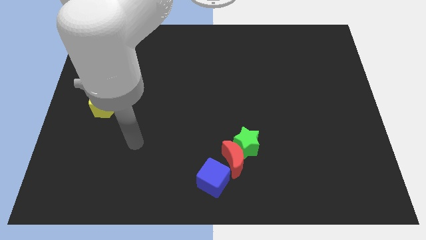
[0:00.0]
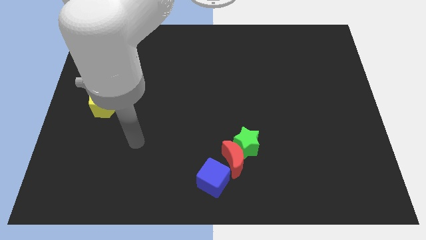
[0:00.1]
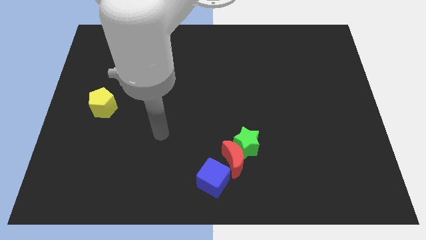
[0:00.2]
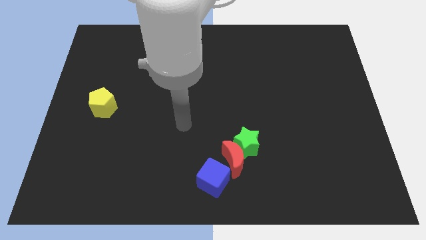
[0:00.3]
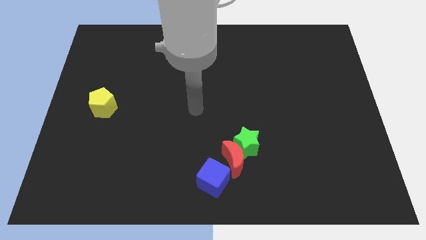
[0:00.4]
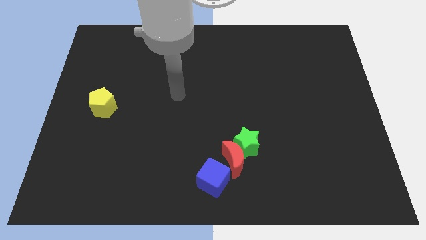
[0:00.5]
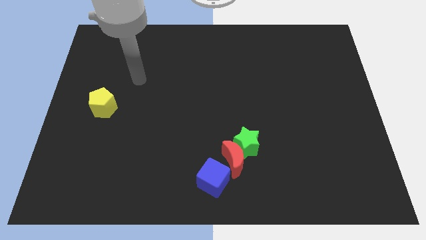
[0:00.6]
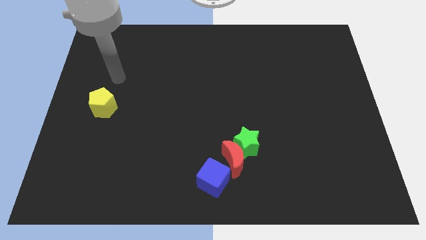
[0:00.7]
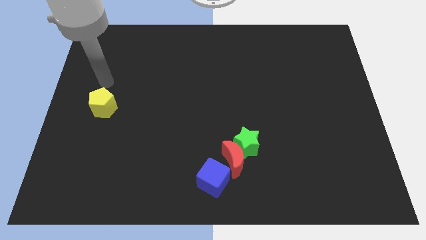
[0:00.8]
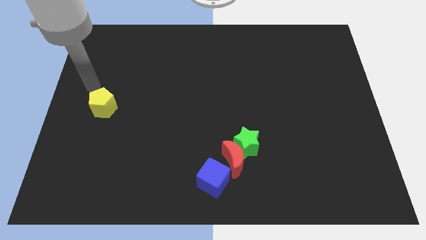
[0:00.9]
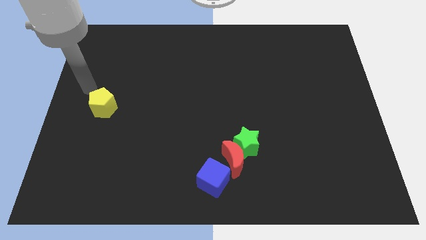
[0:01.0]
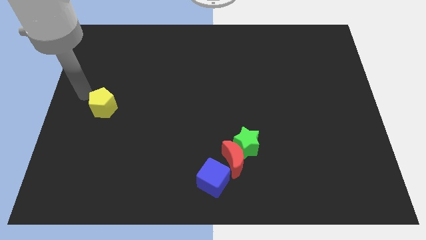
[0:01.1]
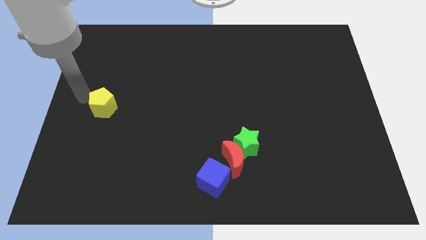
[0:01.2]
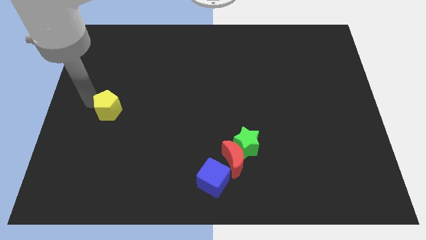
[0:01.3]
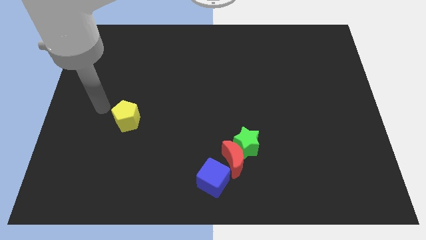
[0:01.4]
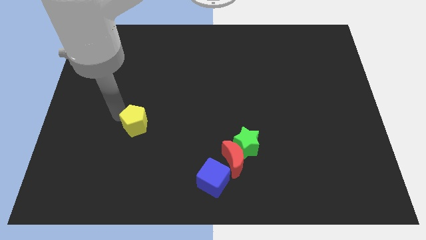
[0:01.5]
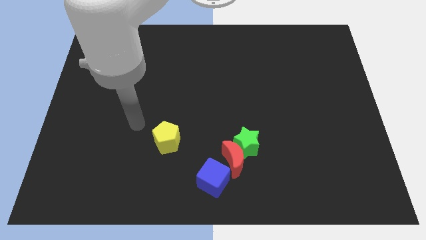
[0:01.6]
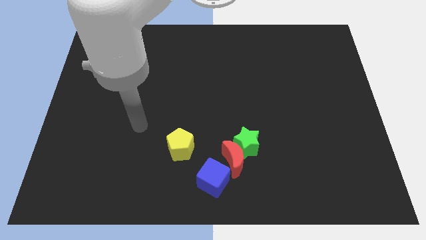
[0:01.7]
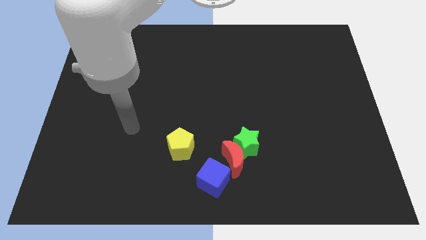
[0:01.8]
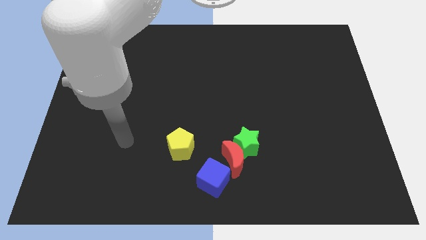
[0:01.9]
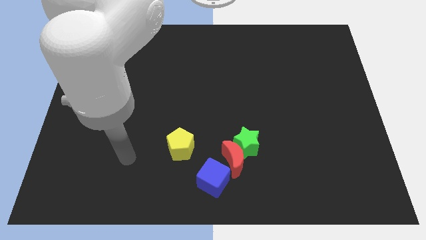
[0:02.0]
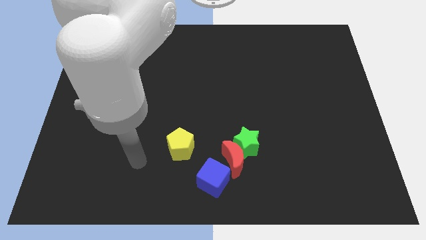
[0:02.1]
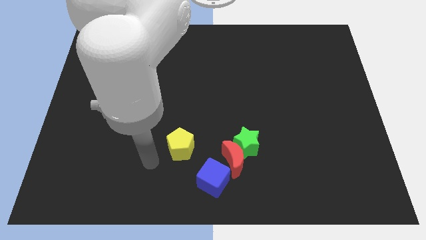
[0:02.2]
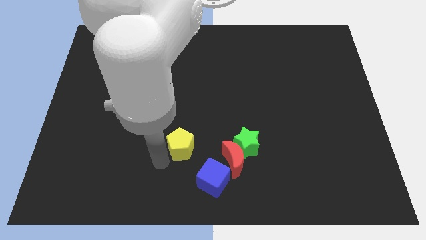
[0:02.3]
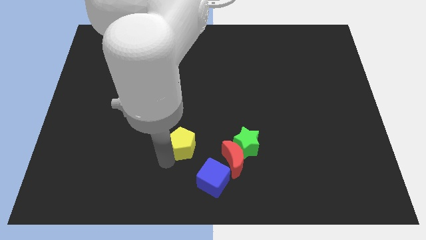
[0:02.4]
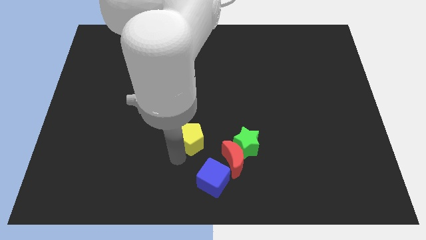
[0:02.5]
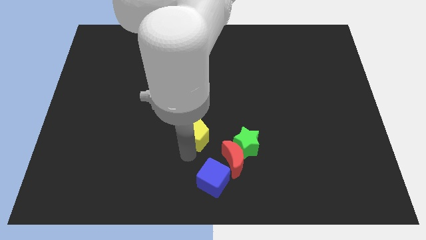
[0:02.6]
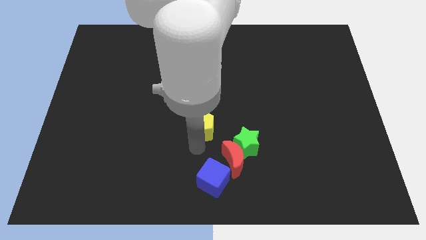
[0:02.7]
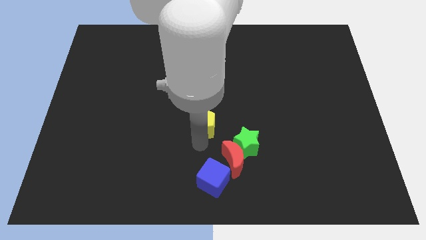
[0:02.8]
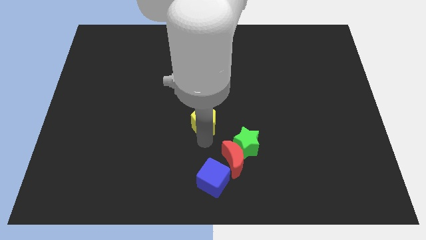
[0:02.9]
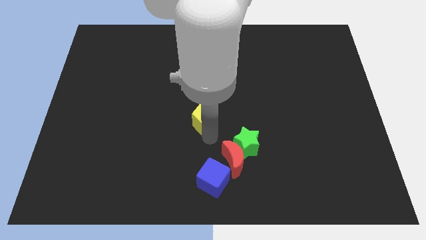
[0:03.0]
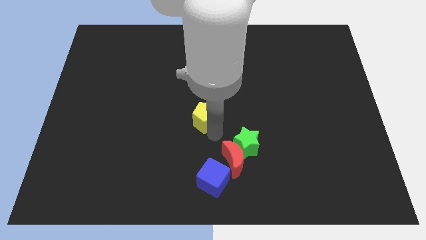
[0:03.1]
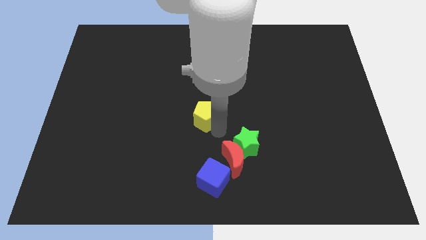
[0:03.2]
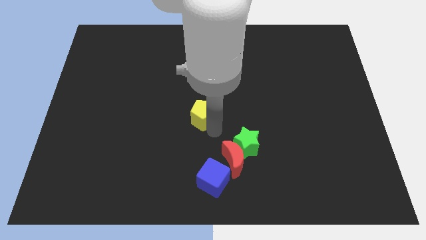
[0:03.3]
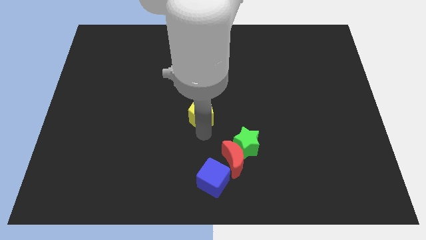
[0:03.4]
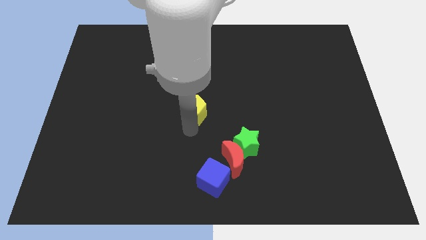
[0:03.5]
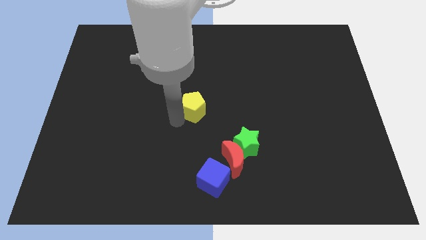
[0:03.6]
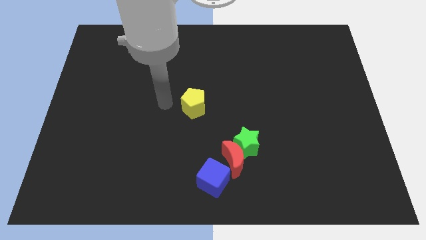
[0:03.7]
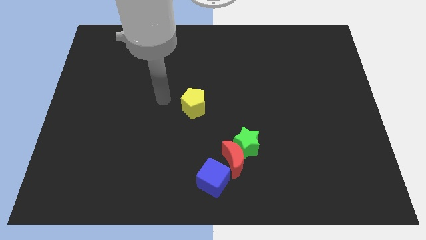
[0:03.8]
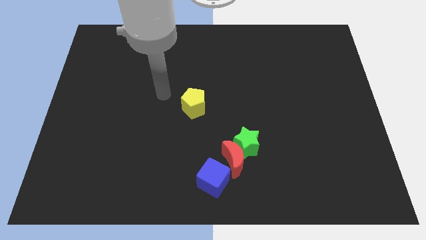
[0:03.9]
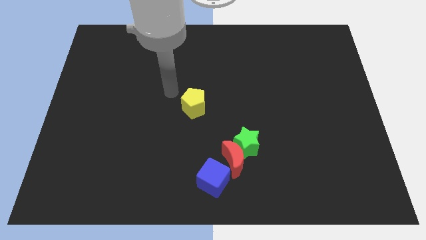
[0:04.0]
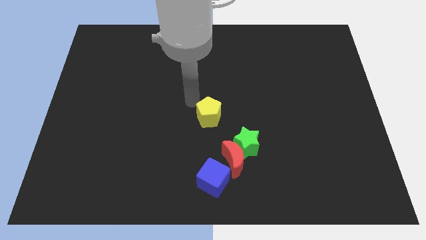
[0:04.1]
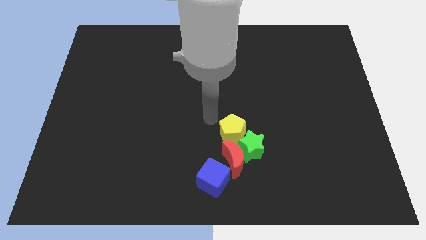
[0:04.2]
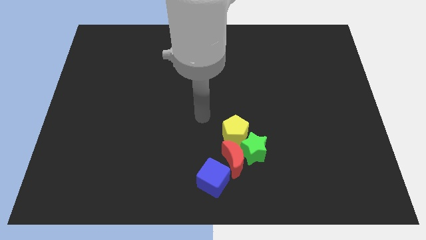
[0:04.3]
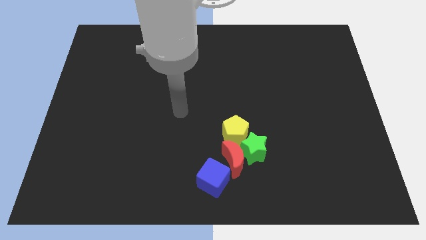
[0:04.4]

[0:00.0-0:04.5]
push the pentagon to the green star

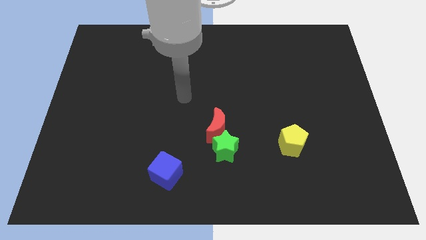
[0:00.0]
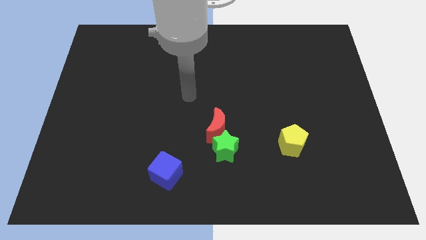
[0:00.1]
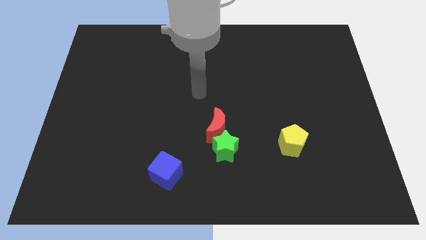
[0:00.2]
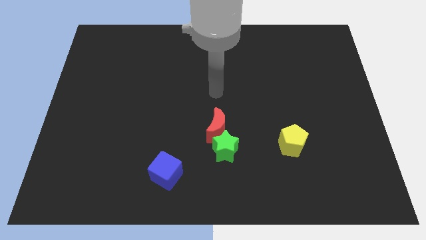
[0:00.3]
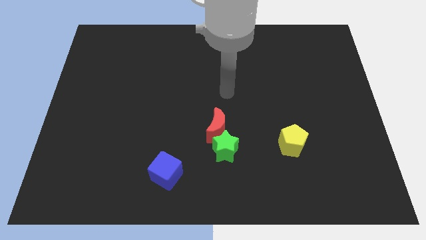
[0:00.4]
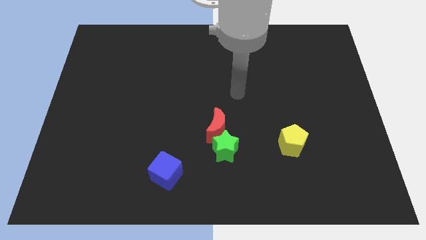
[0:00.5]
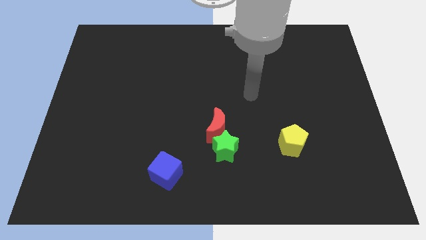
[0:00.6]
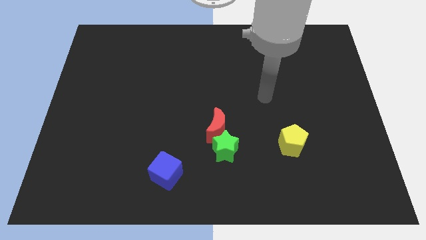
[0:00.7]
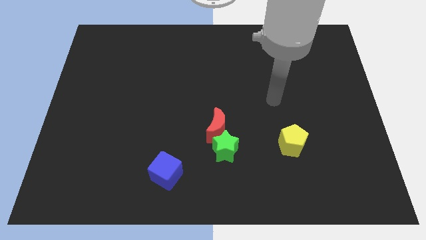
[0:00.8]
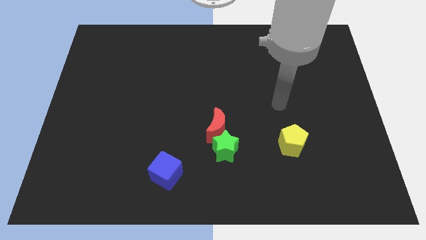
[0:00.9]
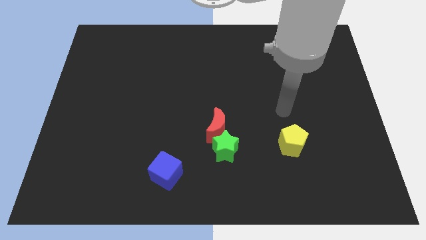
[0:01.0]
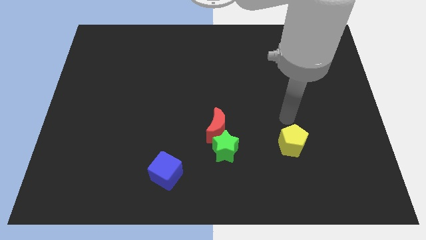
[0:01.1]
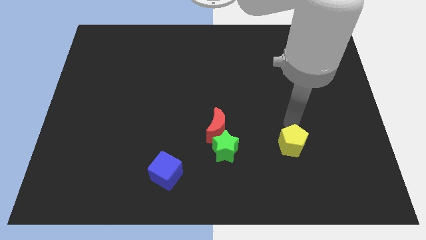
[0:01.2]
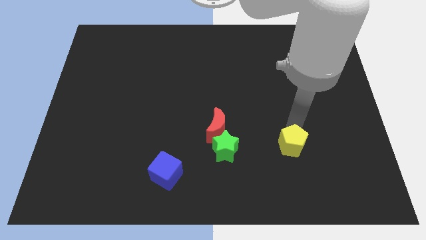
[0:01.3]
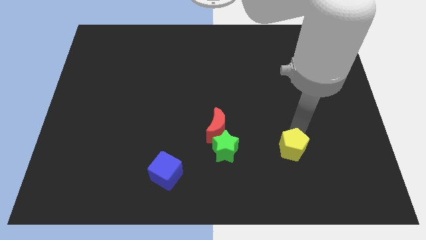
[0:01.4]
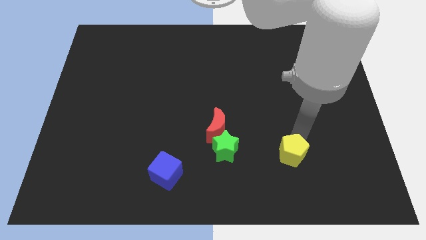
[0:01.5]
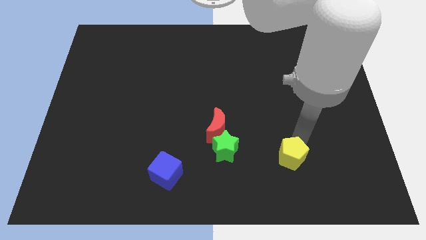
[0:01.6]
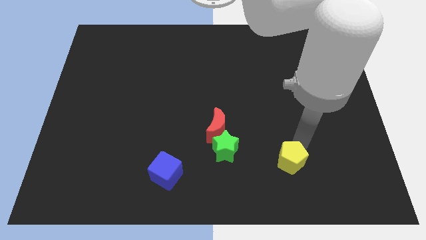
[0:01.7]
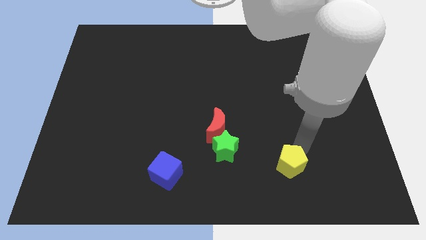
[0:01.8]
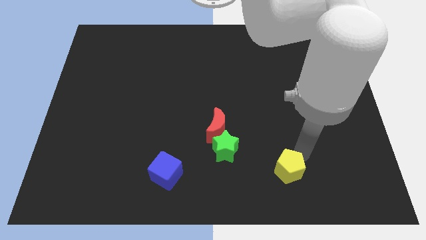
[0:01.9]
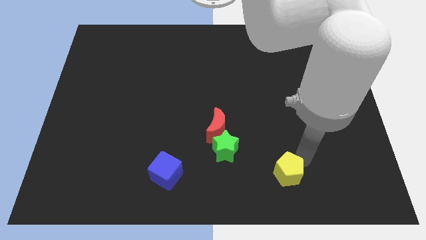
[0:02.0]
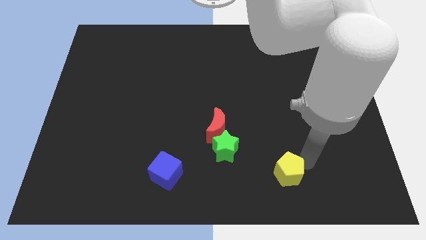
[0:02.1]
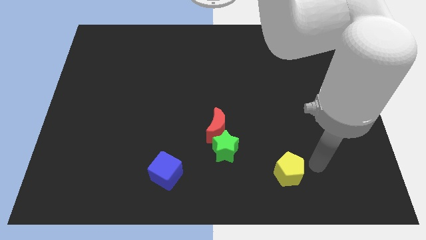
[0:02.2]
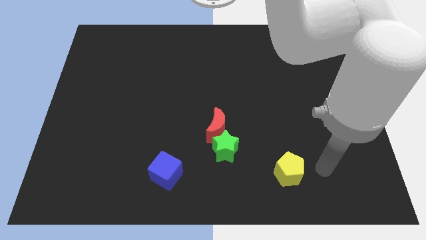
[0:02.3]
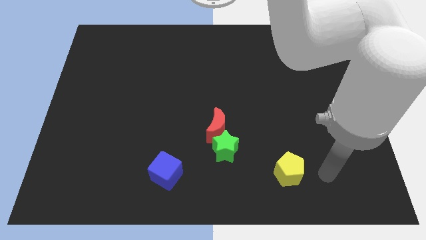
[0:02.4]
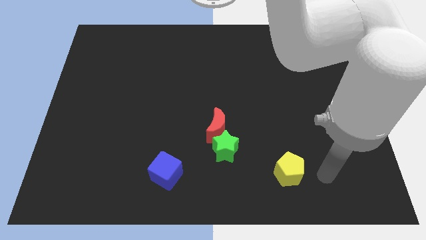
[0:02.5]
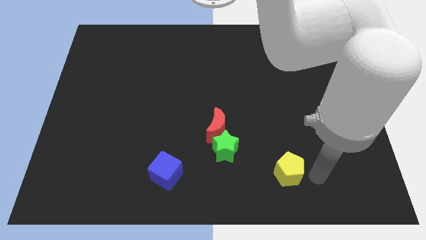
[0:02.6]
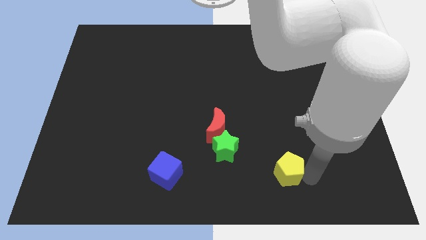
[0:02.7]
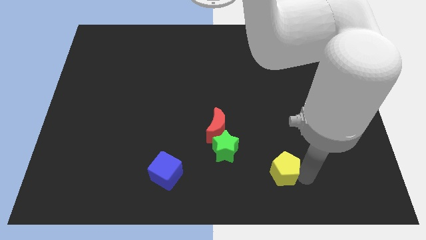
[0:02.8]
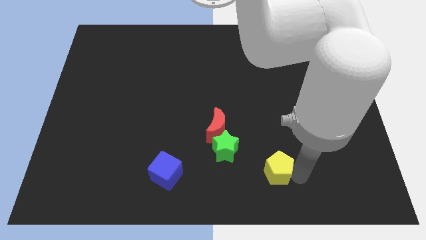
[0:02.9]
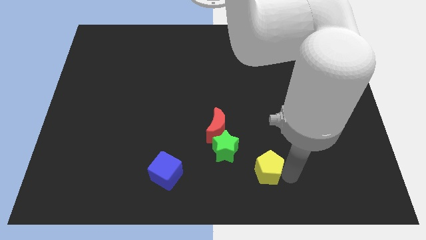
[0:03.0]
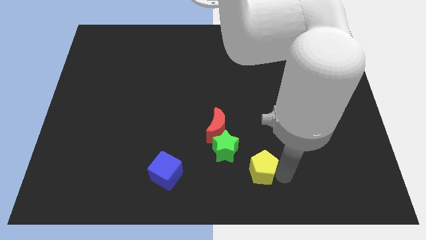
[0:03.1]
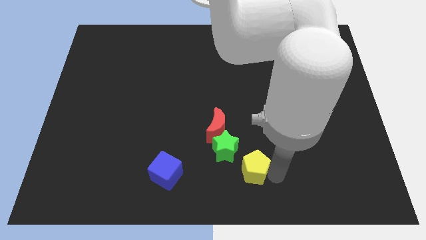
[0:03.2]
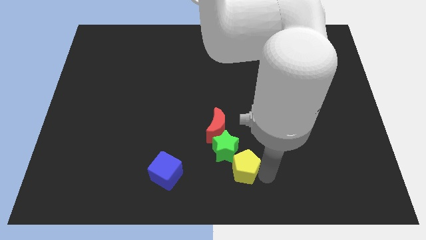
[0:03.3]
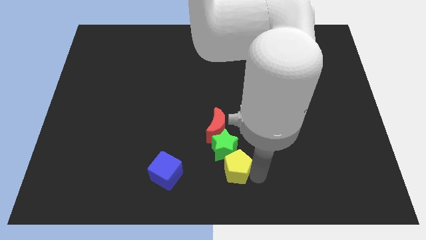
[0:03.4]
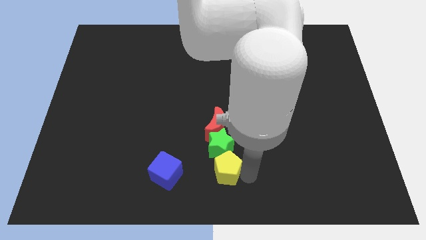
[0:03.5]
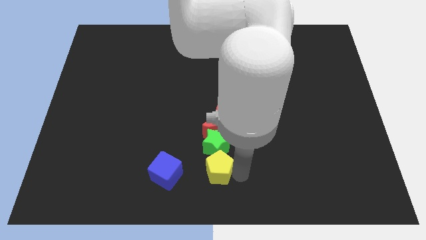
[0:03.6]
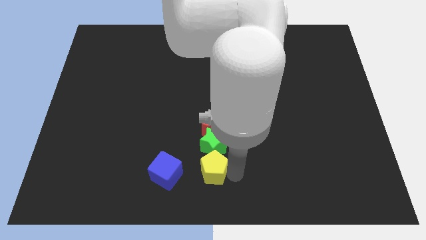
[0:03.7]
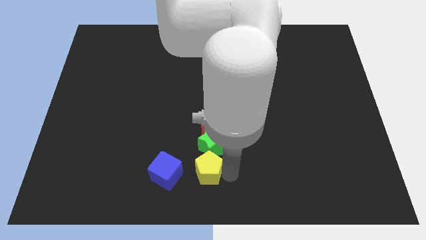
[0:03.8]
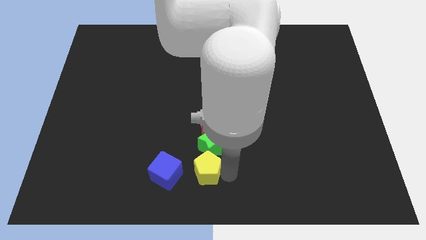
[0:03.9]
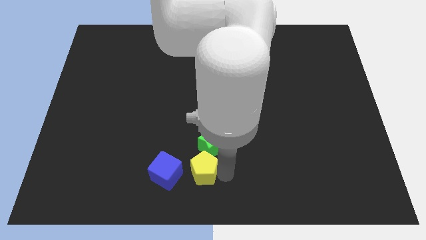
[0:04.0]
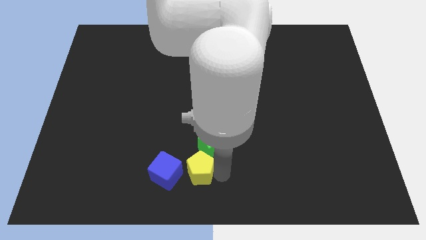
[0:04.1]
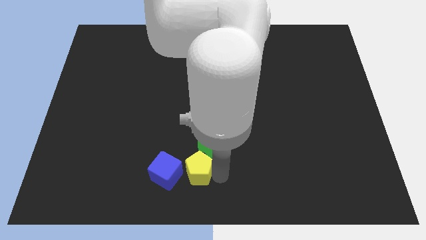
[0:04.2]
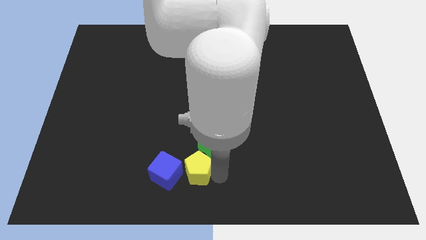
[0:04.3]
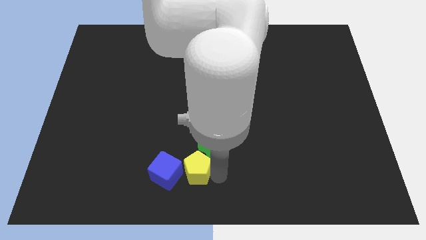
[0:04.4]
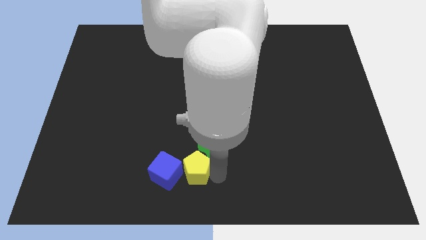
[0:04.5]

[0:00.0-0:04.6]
move the pentagon close to the blue cube
